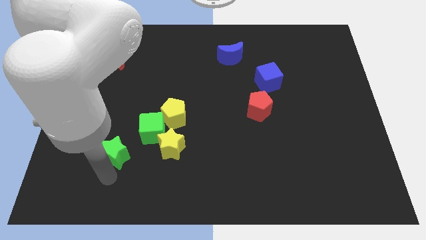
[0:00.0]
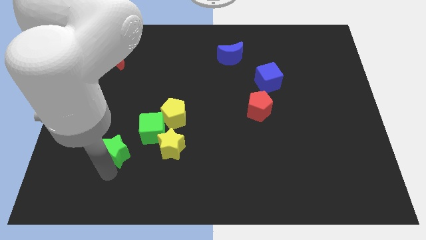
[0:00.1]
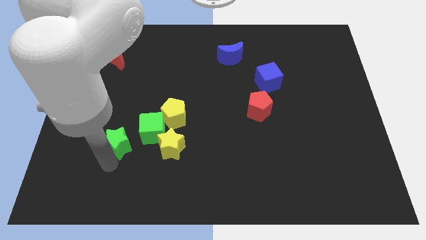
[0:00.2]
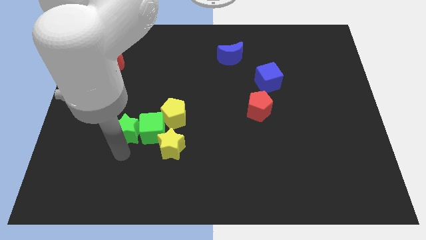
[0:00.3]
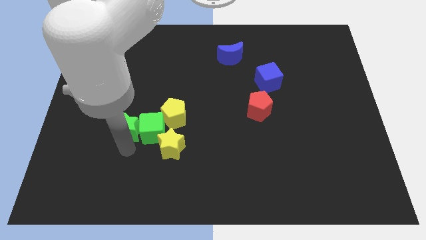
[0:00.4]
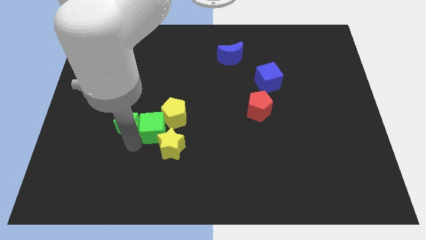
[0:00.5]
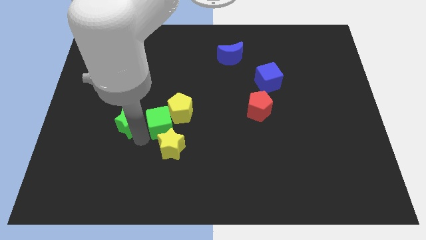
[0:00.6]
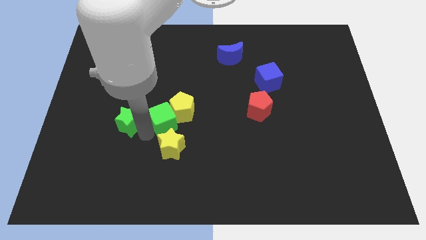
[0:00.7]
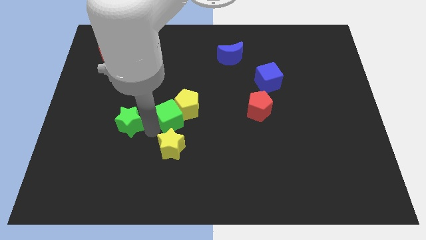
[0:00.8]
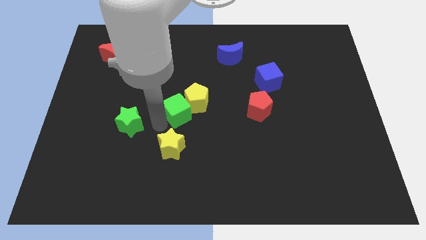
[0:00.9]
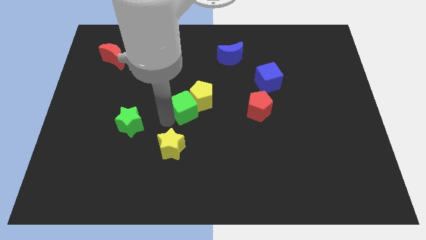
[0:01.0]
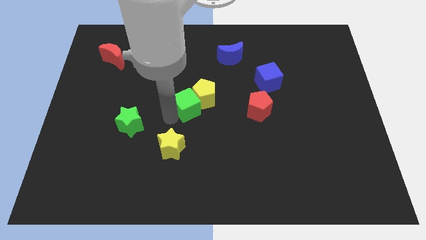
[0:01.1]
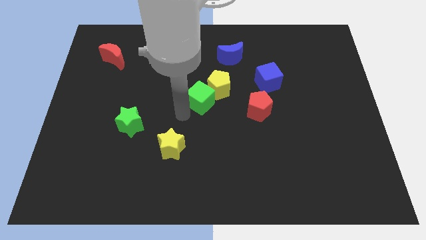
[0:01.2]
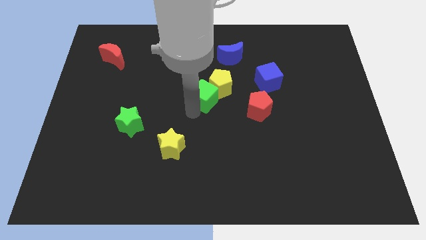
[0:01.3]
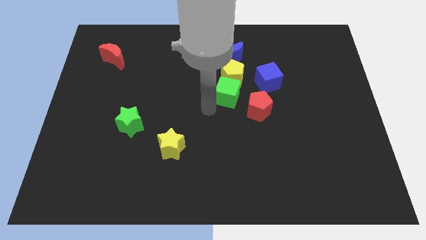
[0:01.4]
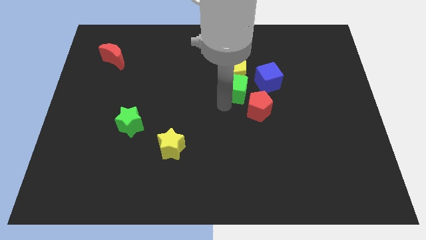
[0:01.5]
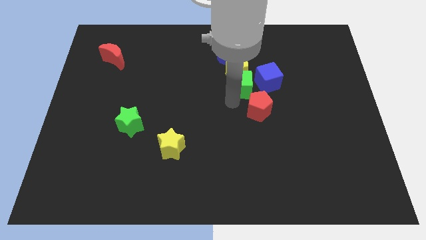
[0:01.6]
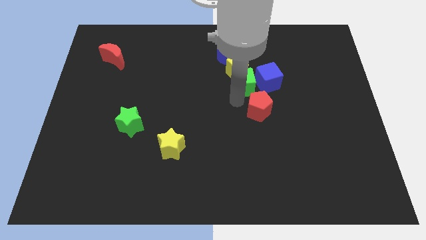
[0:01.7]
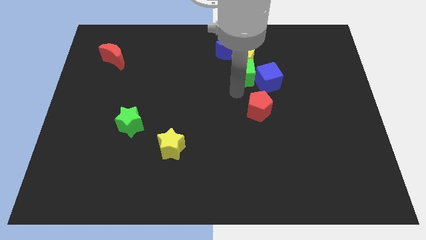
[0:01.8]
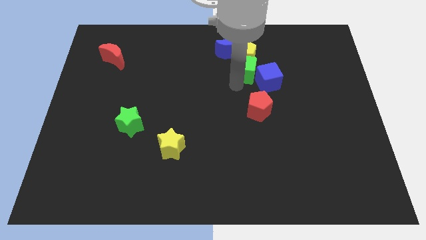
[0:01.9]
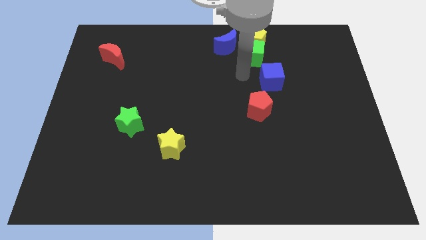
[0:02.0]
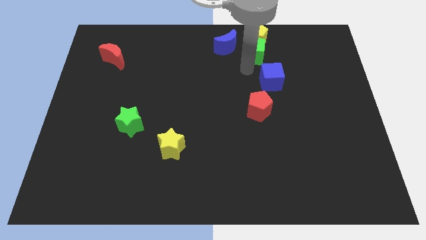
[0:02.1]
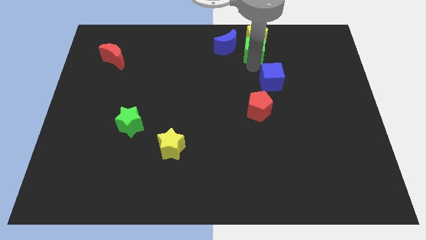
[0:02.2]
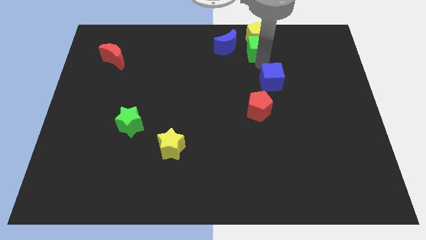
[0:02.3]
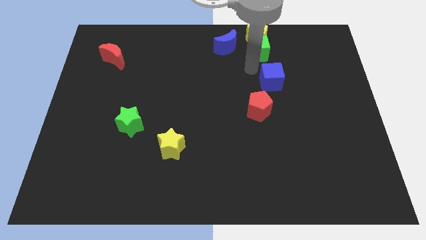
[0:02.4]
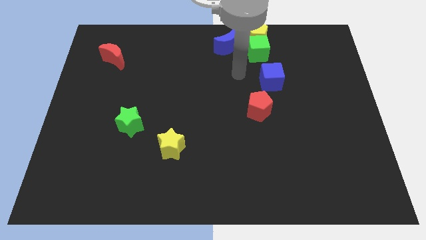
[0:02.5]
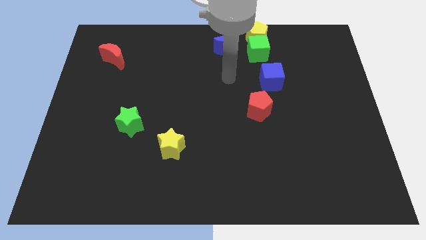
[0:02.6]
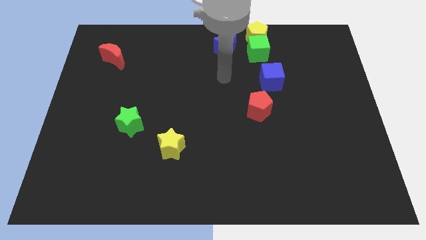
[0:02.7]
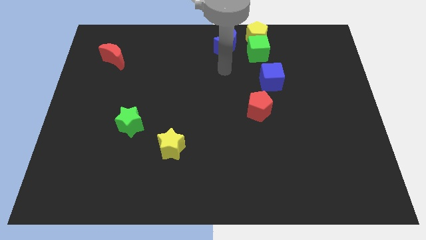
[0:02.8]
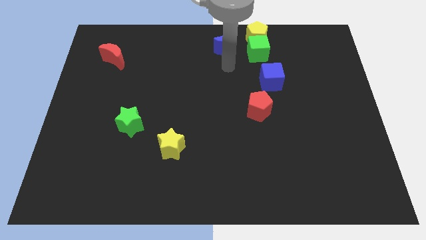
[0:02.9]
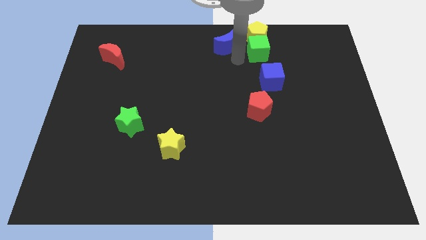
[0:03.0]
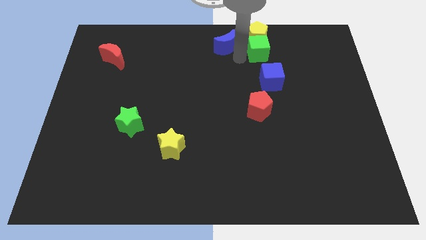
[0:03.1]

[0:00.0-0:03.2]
place the green cube and yellow pentagon at the right side of the blue moon

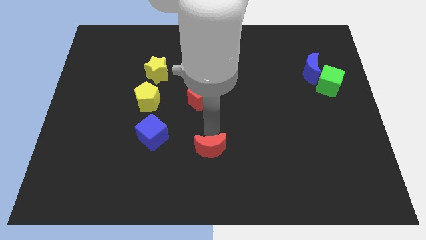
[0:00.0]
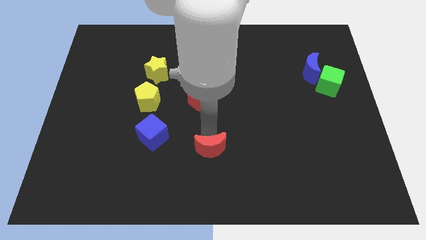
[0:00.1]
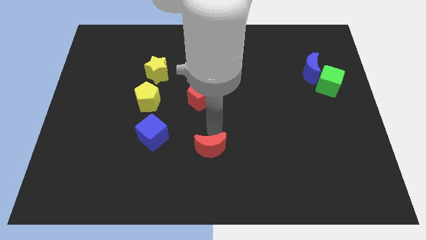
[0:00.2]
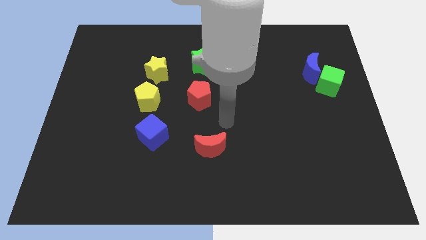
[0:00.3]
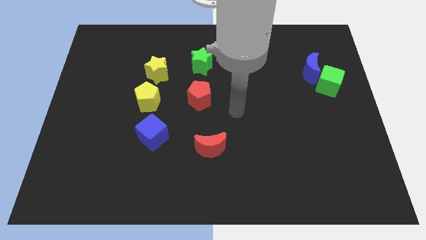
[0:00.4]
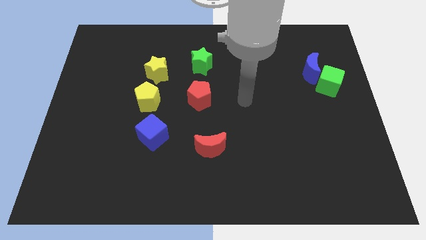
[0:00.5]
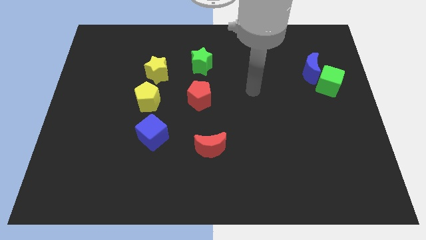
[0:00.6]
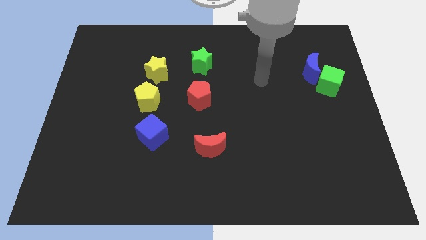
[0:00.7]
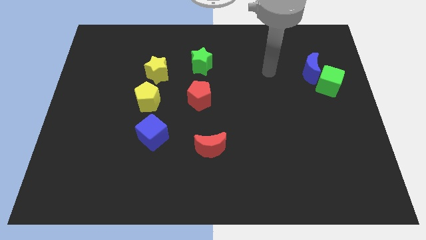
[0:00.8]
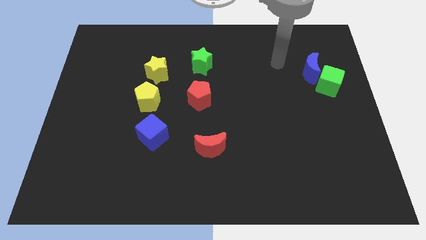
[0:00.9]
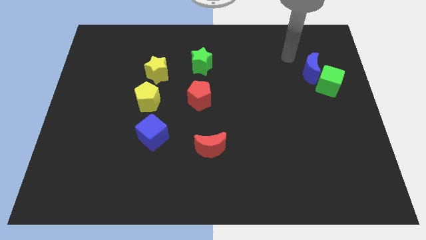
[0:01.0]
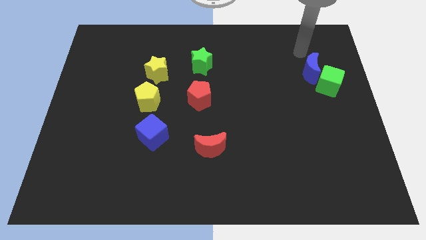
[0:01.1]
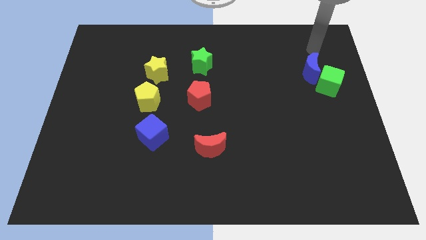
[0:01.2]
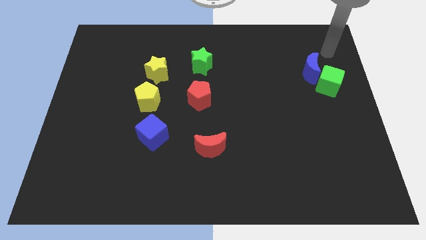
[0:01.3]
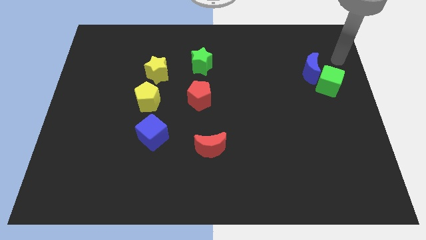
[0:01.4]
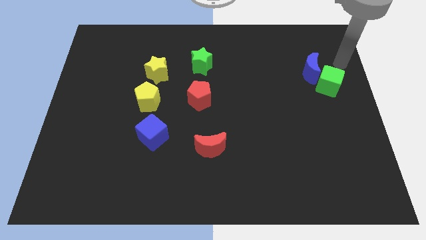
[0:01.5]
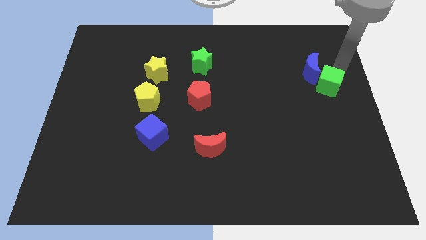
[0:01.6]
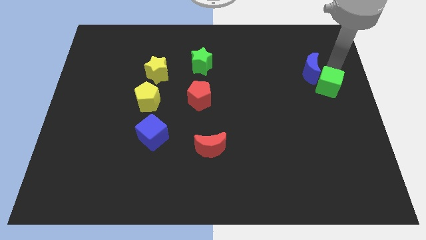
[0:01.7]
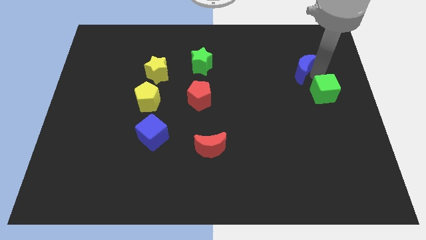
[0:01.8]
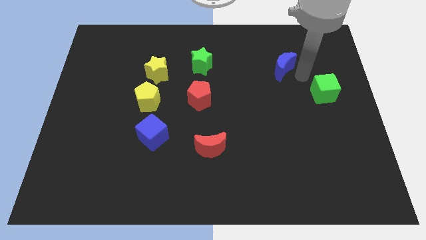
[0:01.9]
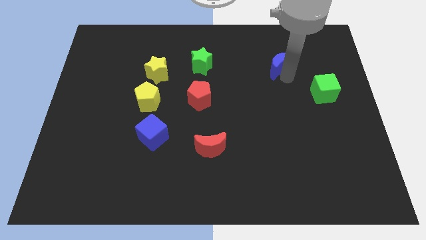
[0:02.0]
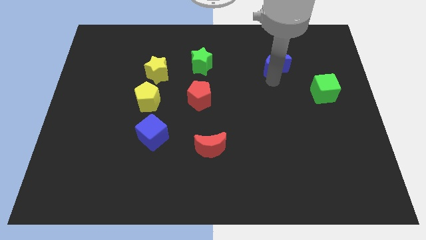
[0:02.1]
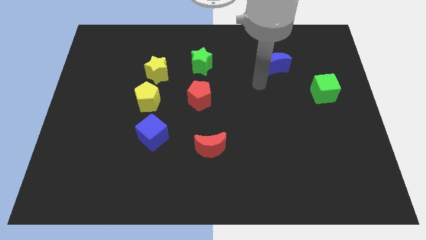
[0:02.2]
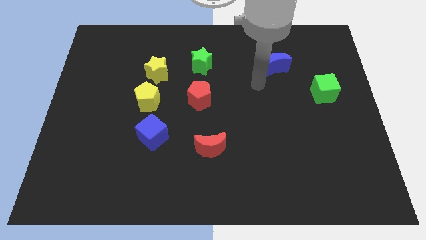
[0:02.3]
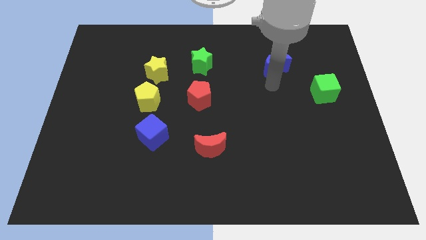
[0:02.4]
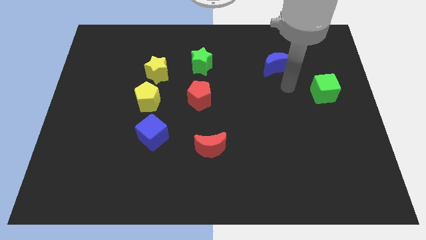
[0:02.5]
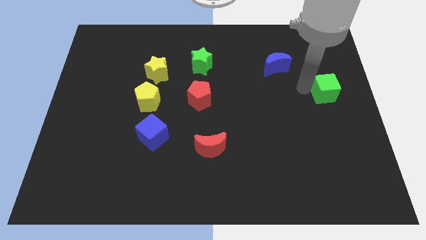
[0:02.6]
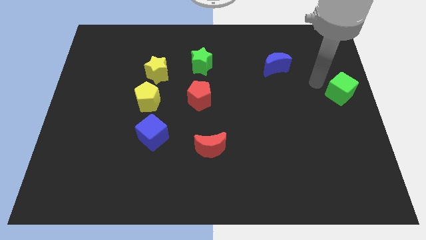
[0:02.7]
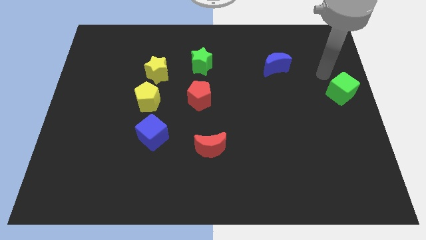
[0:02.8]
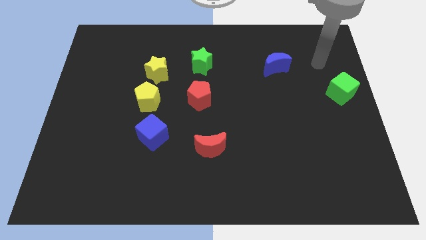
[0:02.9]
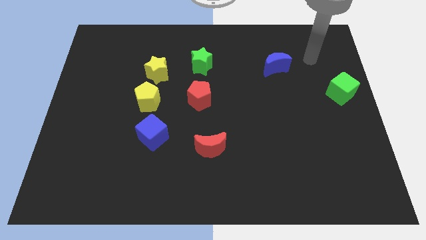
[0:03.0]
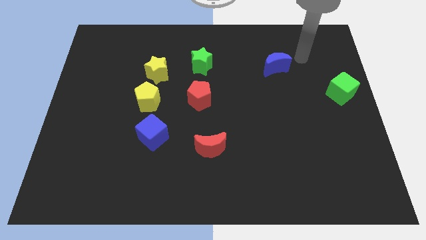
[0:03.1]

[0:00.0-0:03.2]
separate the green cube and the blue crescent from each other

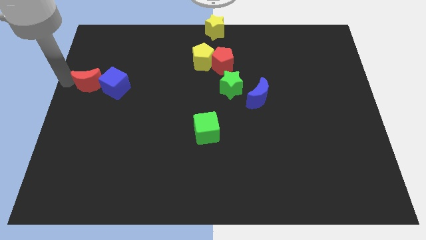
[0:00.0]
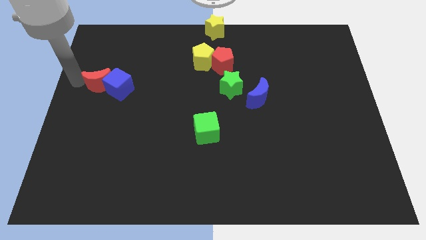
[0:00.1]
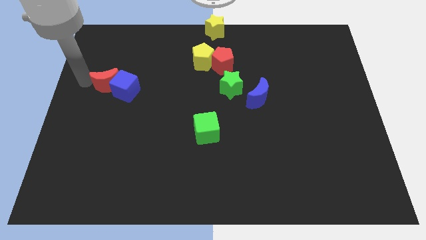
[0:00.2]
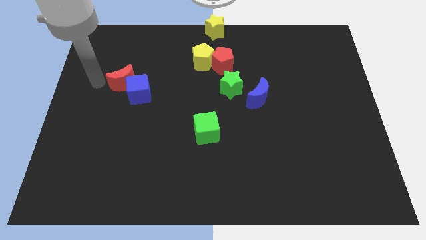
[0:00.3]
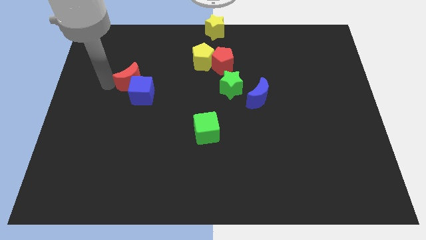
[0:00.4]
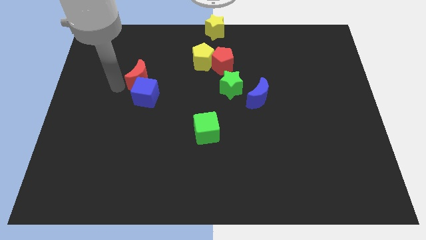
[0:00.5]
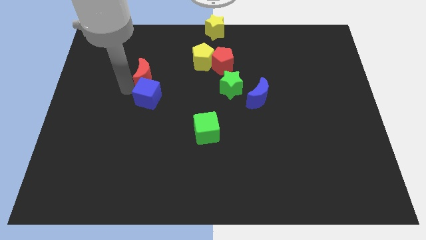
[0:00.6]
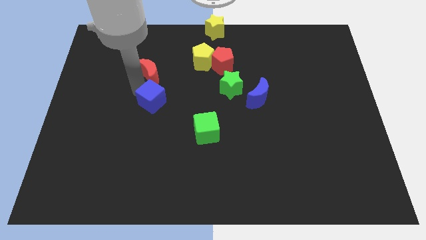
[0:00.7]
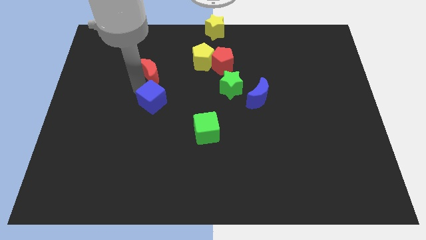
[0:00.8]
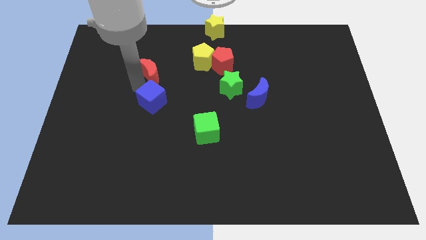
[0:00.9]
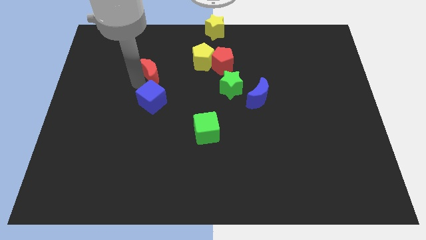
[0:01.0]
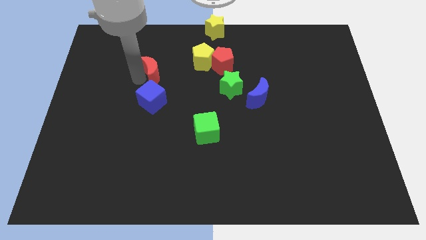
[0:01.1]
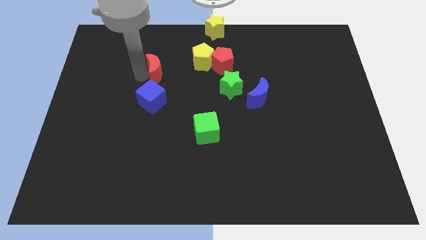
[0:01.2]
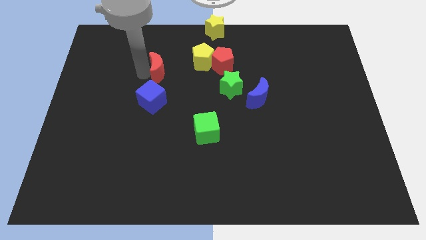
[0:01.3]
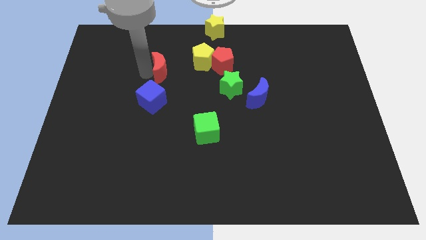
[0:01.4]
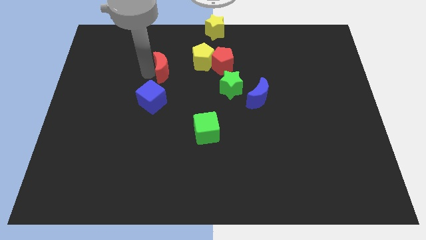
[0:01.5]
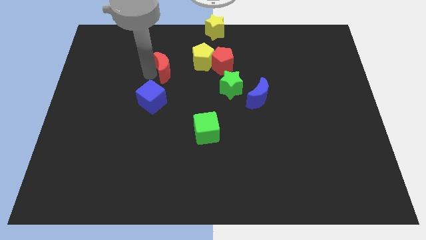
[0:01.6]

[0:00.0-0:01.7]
separate the red crescent and the blue cube

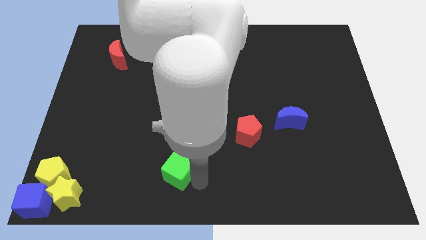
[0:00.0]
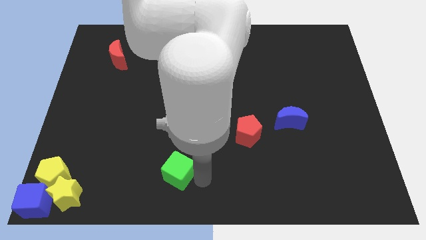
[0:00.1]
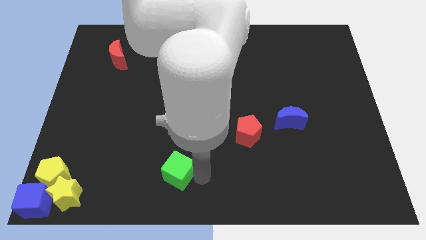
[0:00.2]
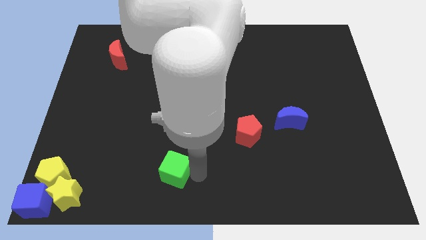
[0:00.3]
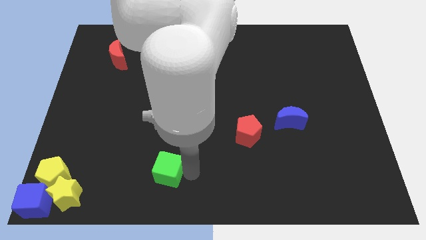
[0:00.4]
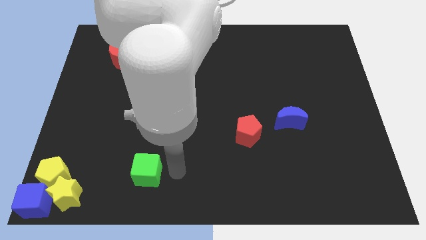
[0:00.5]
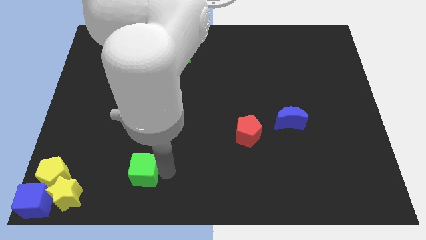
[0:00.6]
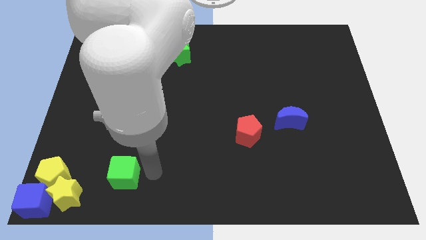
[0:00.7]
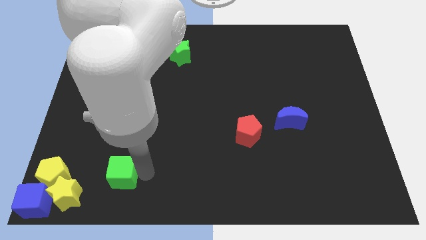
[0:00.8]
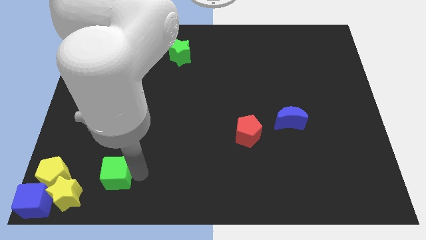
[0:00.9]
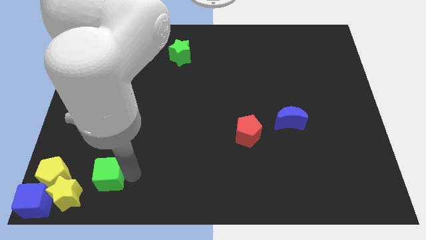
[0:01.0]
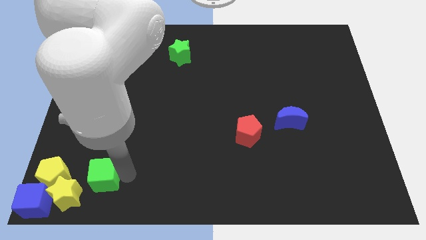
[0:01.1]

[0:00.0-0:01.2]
put the green cube at the top right side of yellow star
